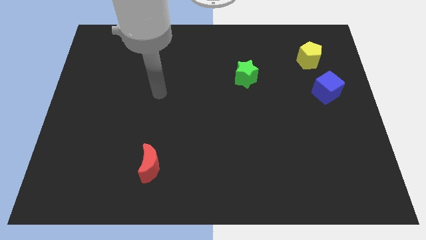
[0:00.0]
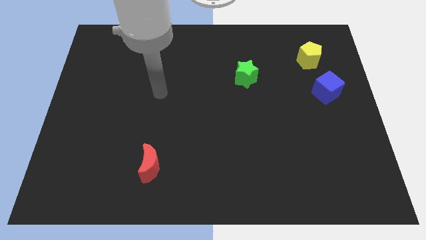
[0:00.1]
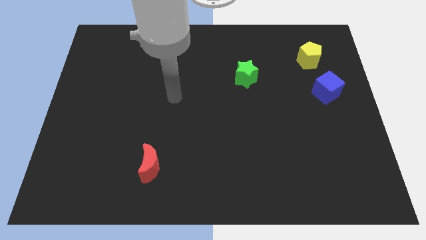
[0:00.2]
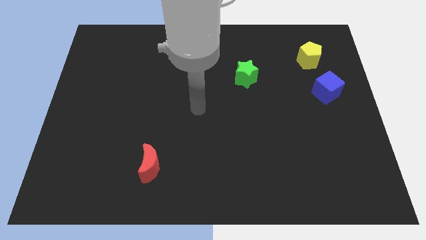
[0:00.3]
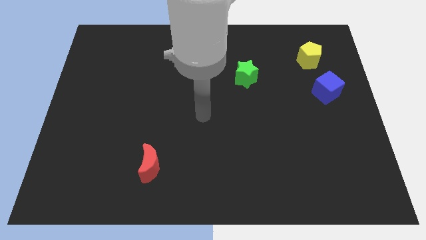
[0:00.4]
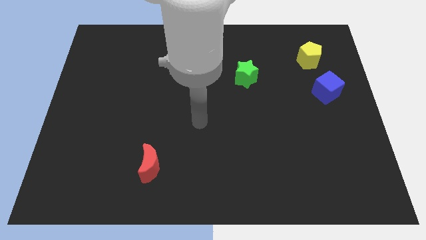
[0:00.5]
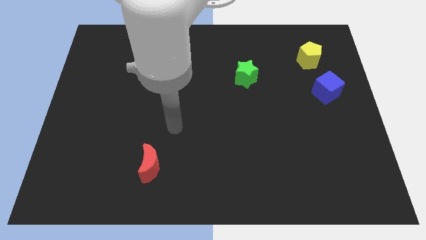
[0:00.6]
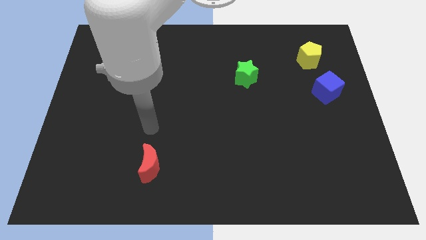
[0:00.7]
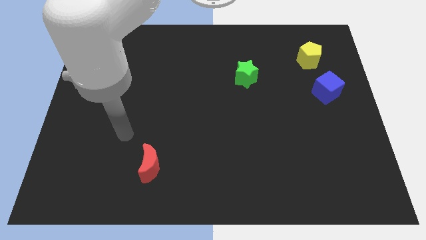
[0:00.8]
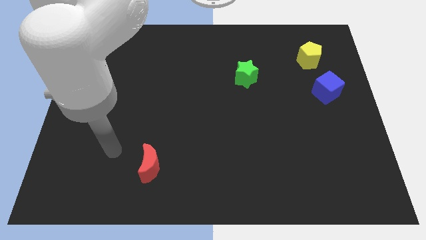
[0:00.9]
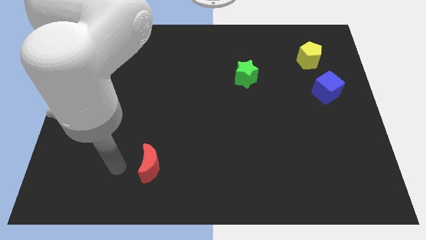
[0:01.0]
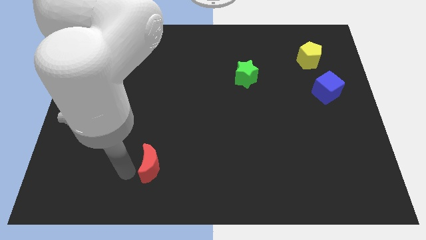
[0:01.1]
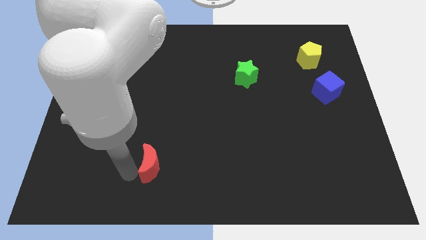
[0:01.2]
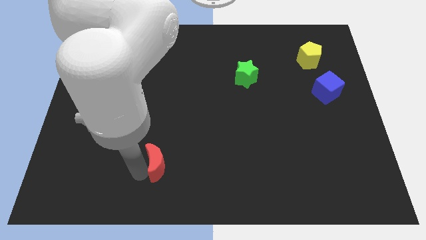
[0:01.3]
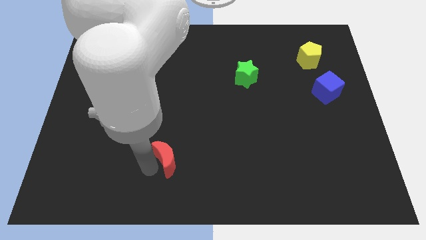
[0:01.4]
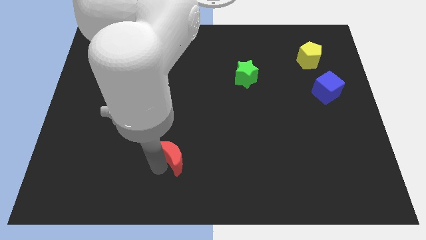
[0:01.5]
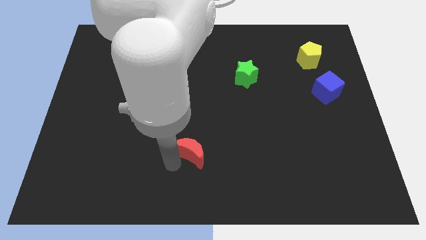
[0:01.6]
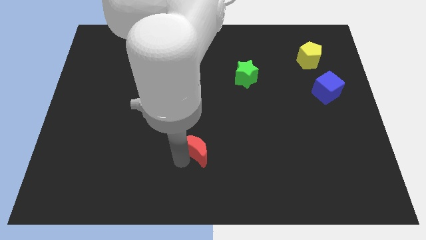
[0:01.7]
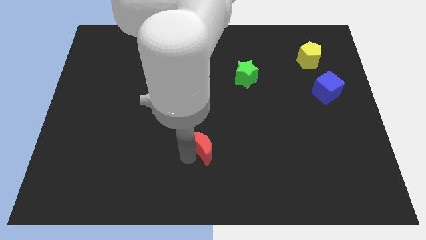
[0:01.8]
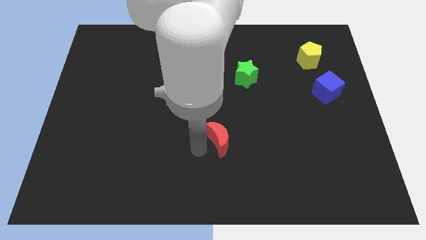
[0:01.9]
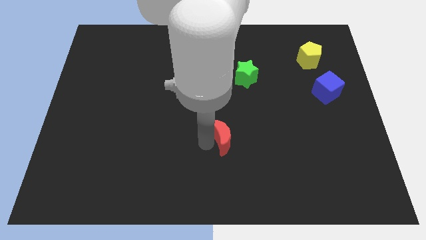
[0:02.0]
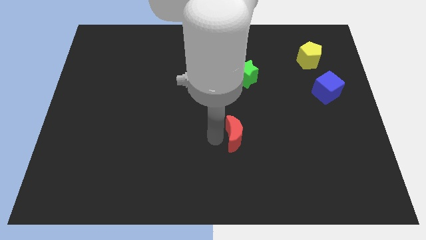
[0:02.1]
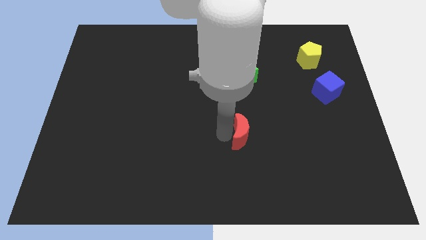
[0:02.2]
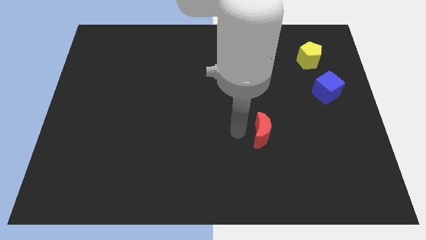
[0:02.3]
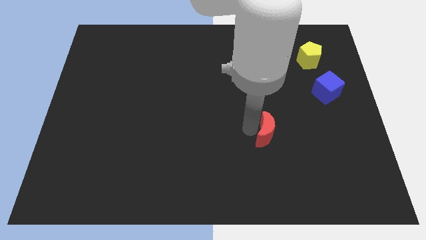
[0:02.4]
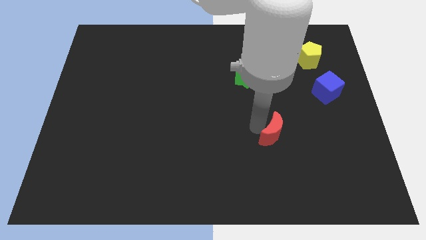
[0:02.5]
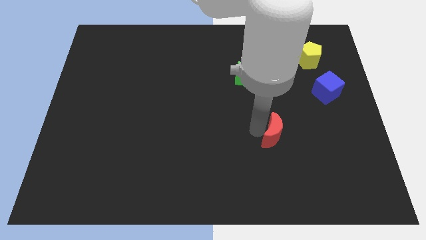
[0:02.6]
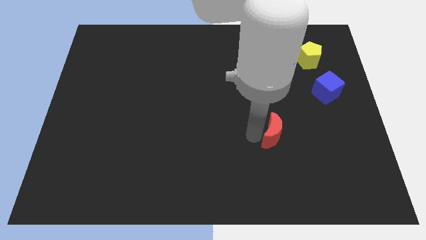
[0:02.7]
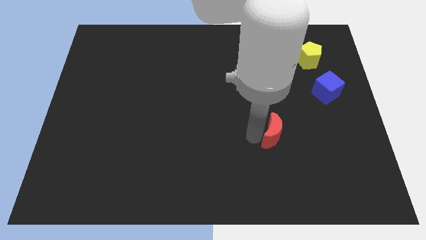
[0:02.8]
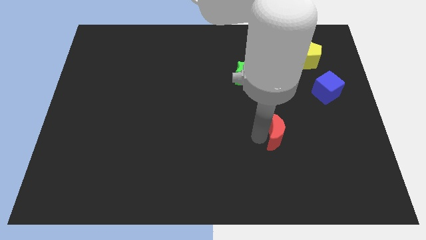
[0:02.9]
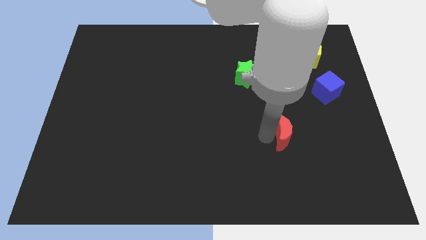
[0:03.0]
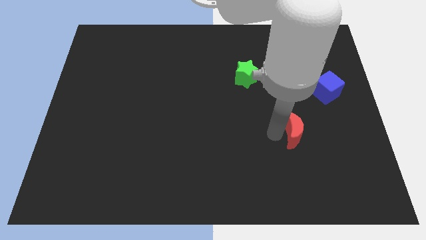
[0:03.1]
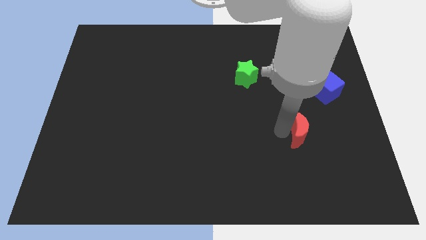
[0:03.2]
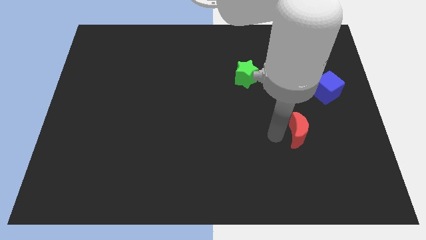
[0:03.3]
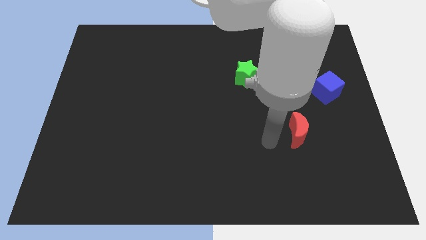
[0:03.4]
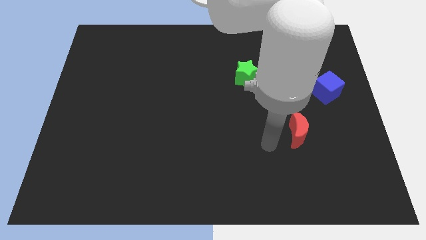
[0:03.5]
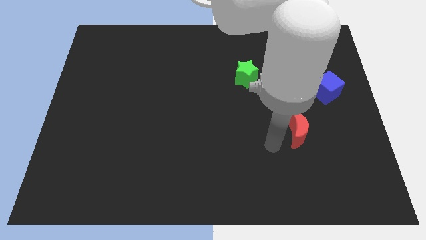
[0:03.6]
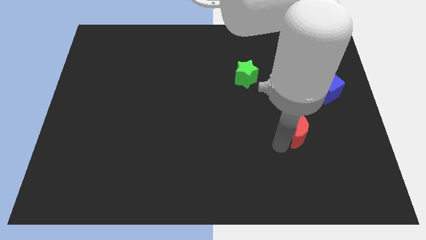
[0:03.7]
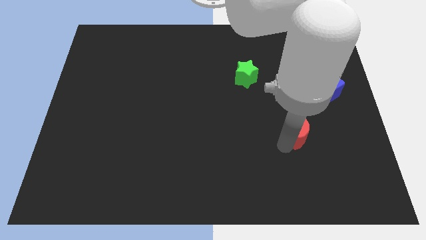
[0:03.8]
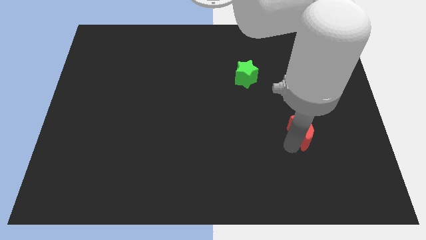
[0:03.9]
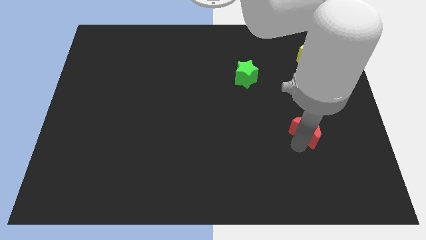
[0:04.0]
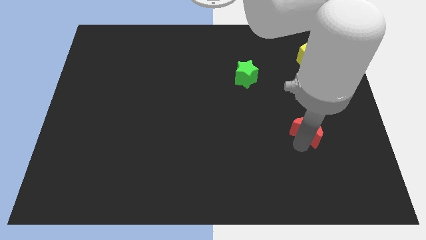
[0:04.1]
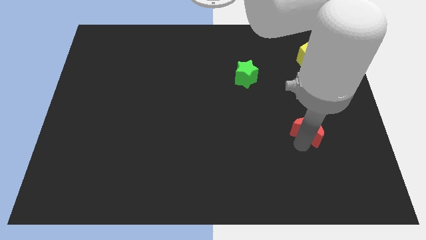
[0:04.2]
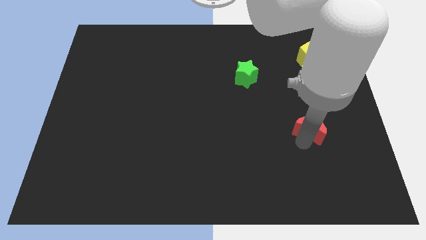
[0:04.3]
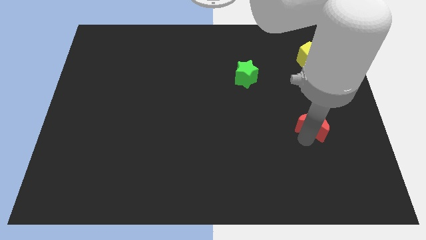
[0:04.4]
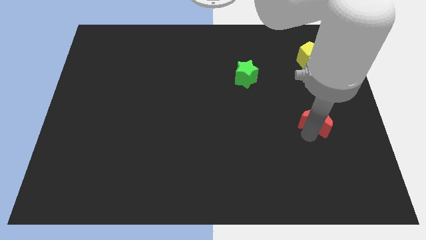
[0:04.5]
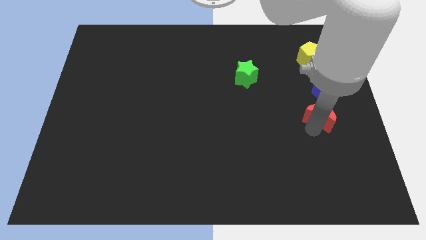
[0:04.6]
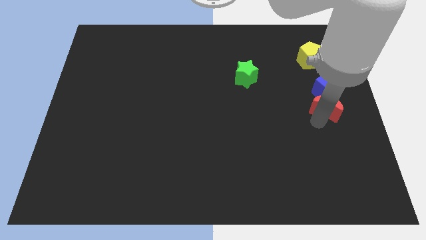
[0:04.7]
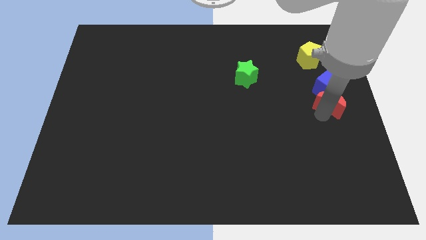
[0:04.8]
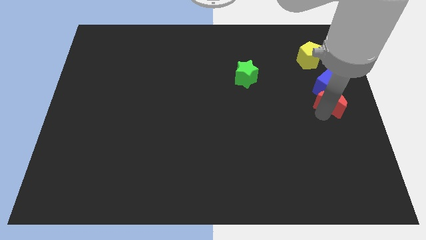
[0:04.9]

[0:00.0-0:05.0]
move the red block to the blue block

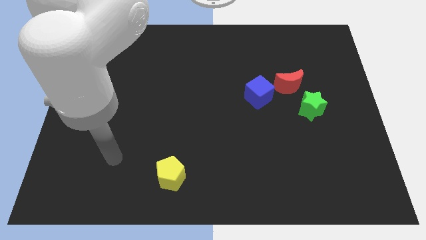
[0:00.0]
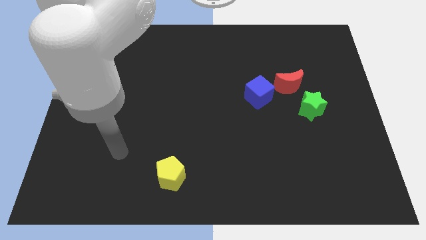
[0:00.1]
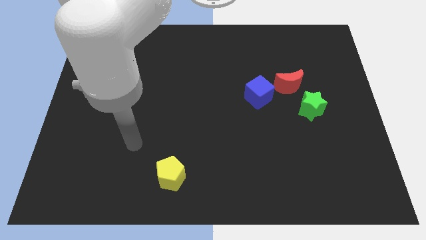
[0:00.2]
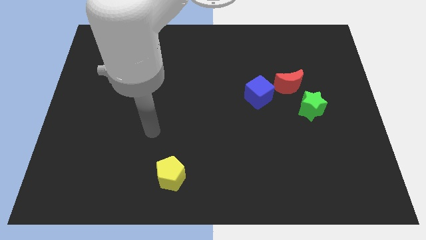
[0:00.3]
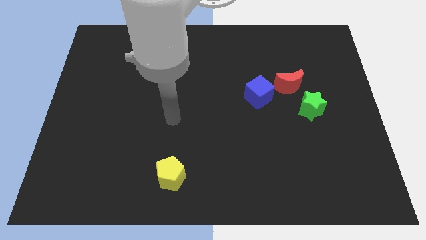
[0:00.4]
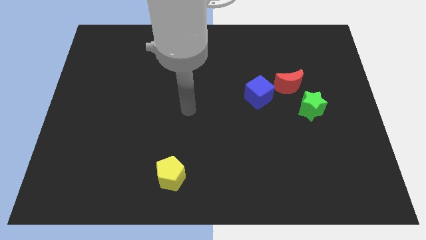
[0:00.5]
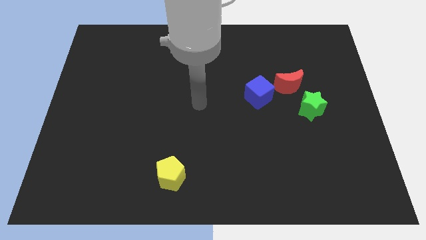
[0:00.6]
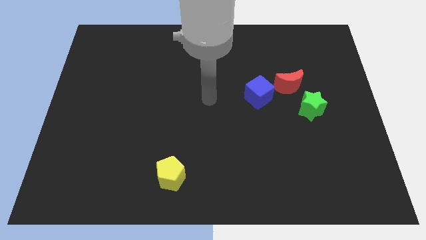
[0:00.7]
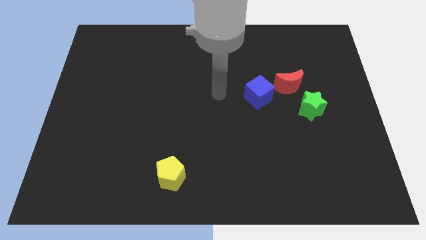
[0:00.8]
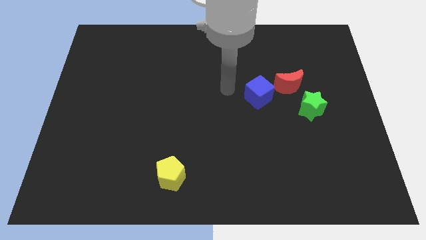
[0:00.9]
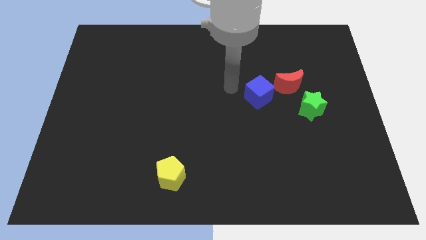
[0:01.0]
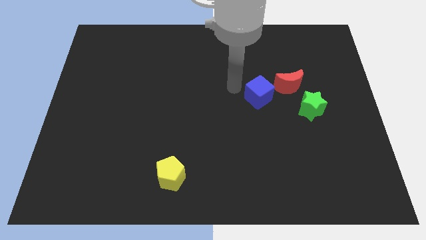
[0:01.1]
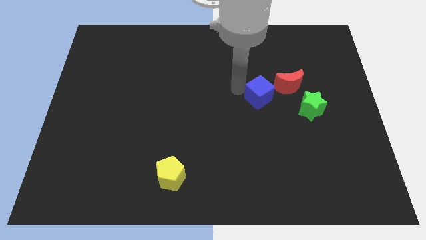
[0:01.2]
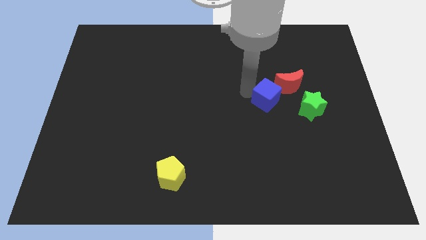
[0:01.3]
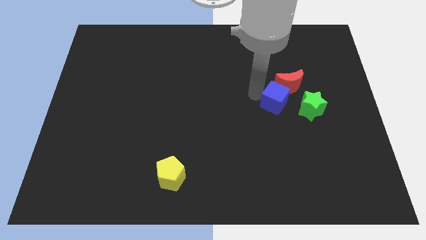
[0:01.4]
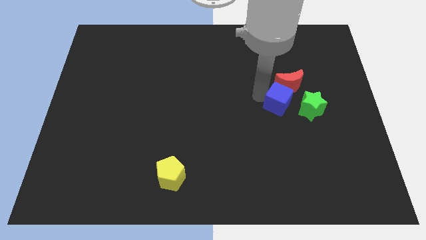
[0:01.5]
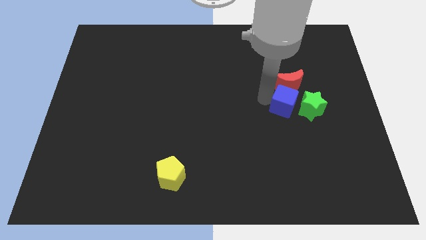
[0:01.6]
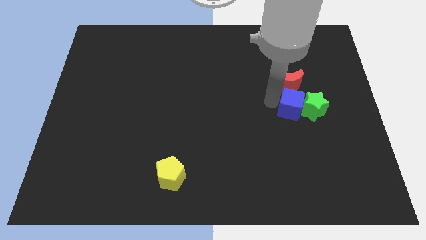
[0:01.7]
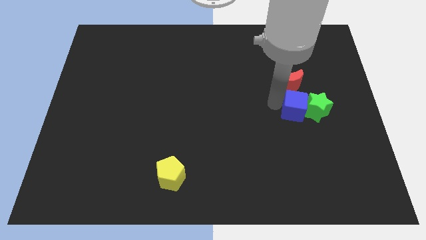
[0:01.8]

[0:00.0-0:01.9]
move the cube towards the star

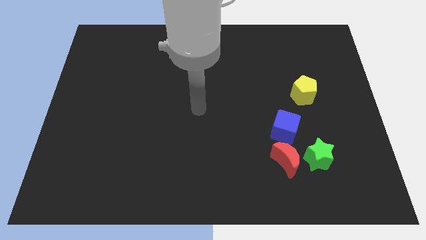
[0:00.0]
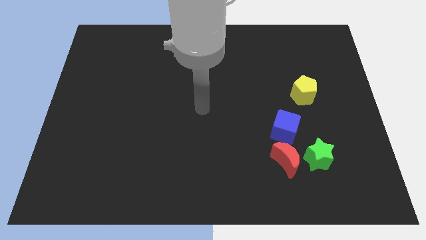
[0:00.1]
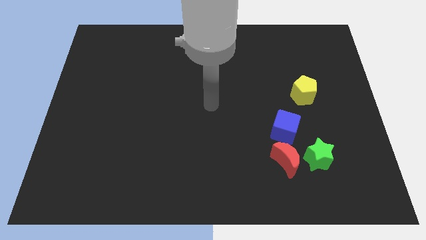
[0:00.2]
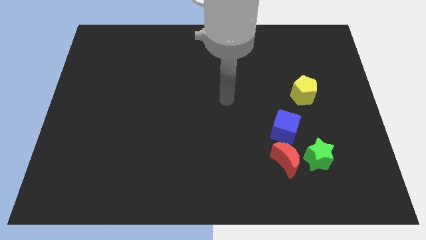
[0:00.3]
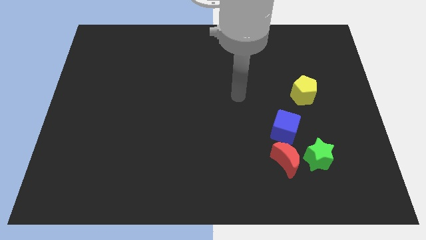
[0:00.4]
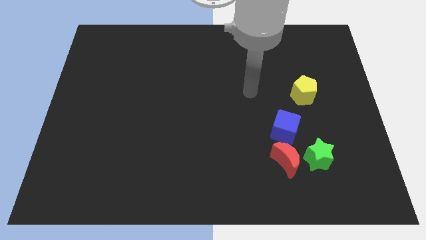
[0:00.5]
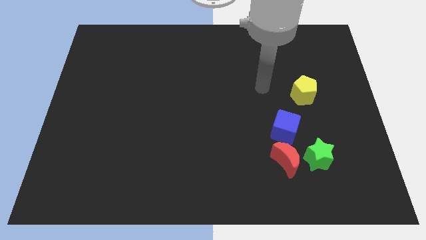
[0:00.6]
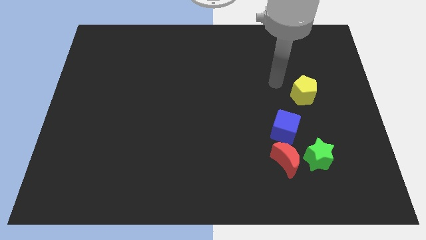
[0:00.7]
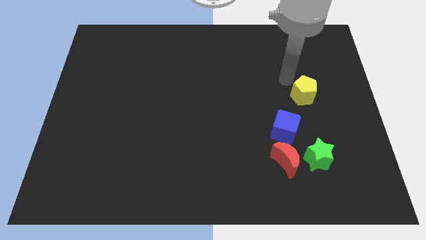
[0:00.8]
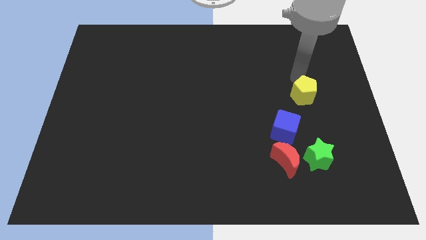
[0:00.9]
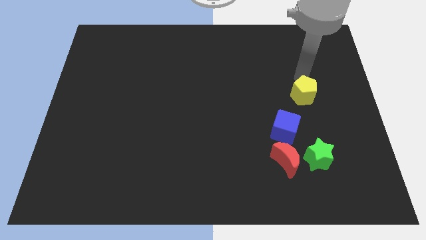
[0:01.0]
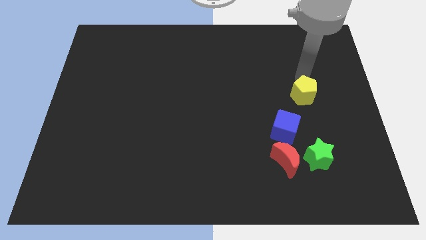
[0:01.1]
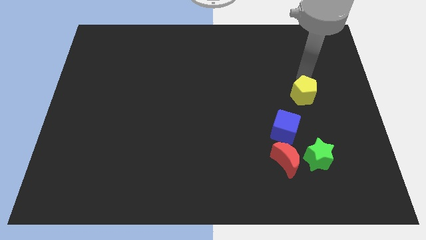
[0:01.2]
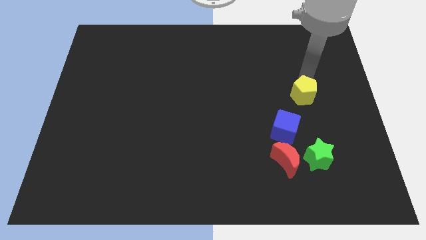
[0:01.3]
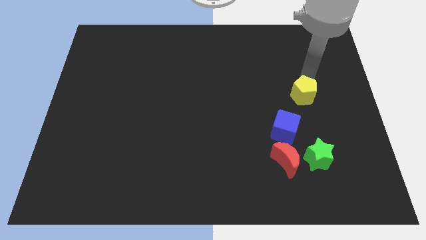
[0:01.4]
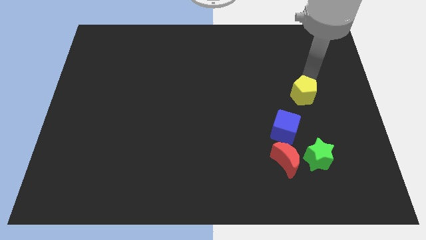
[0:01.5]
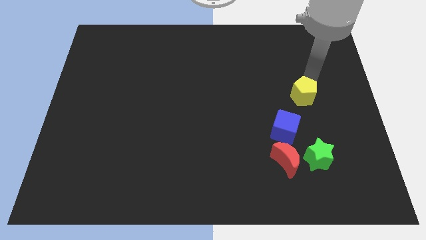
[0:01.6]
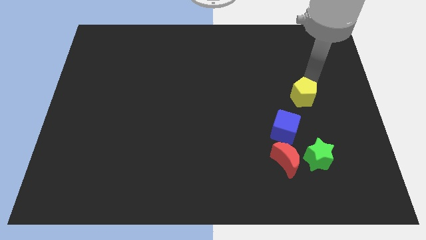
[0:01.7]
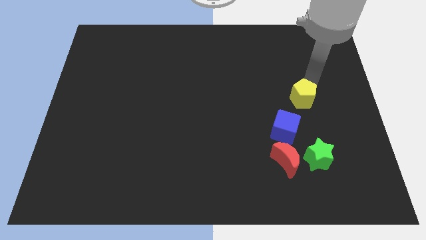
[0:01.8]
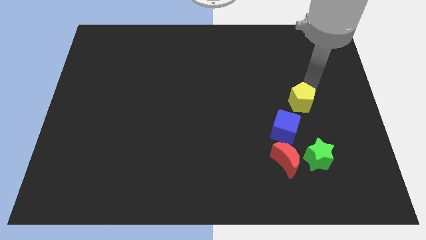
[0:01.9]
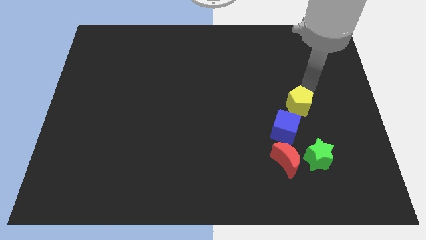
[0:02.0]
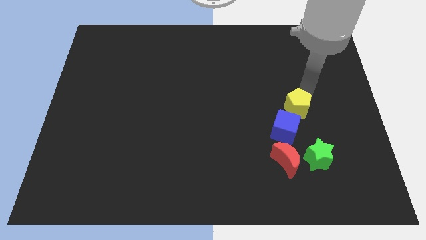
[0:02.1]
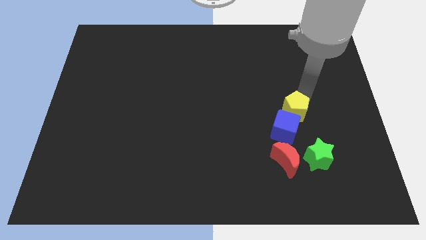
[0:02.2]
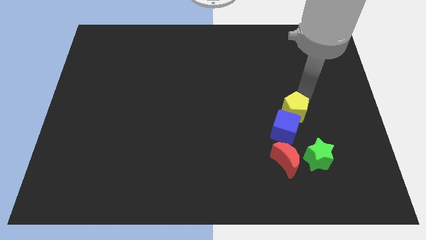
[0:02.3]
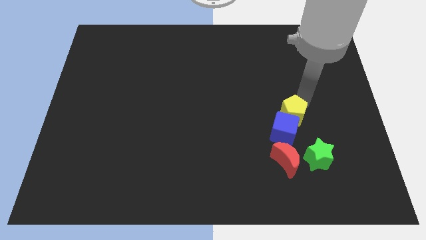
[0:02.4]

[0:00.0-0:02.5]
move the yellow pentagon to the blue block
